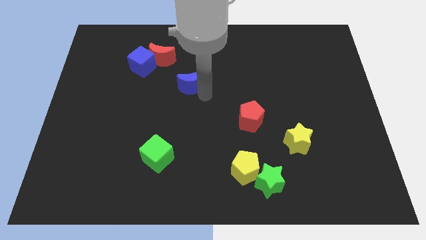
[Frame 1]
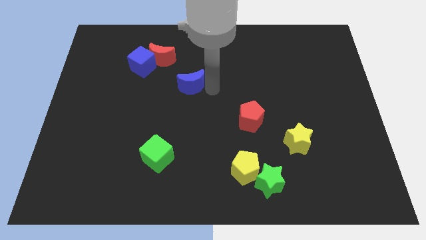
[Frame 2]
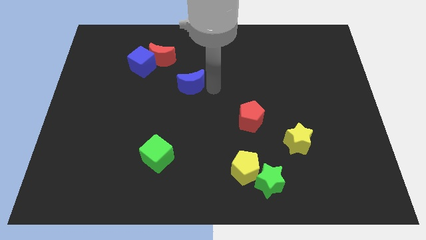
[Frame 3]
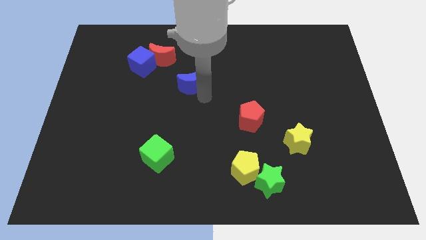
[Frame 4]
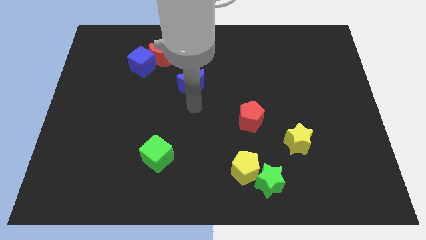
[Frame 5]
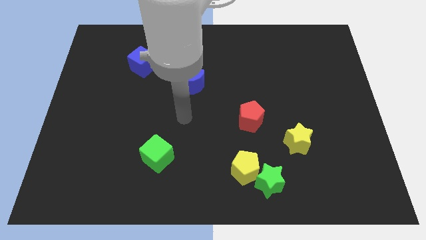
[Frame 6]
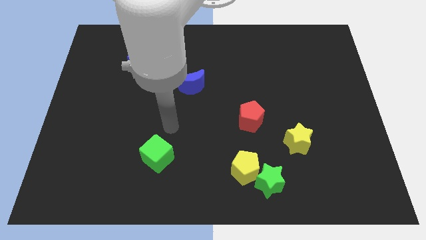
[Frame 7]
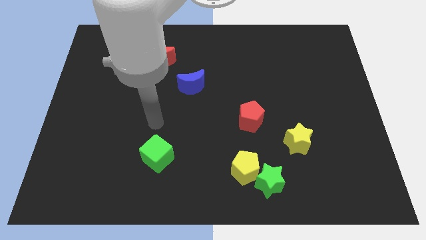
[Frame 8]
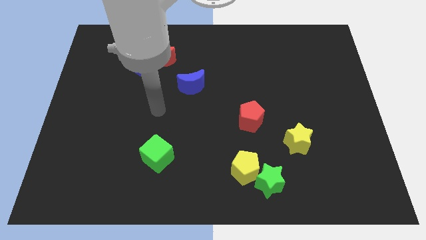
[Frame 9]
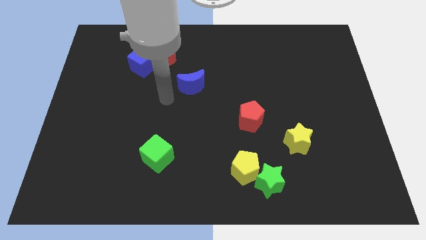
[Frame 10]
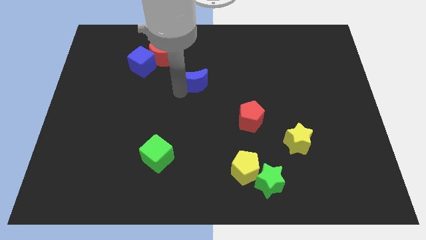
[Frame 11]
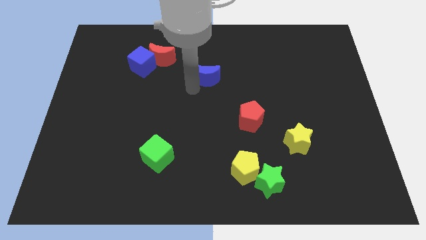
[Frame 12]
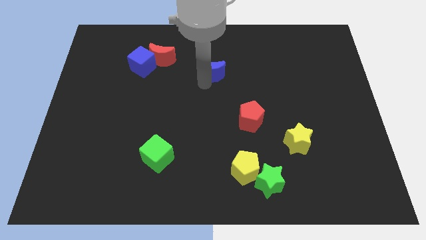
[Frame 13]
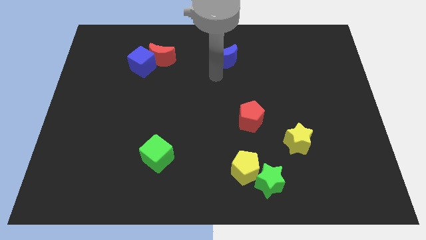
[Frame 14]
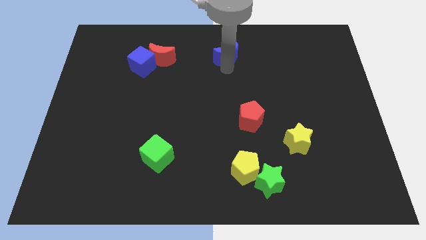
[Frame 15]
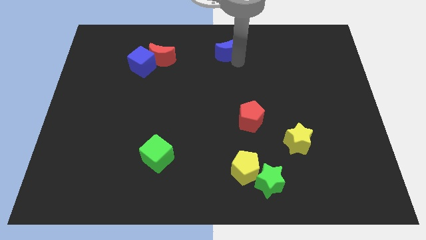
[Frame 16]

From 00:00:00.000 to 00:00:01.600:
move the blue crescent towards the top center

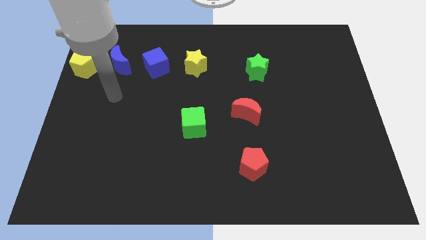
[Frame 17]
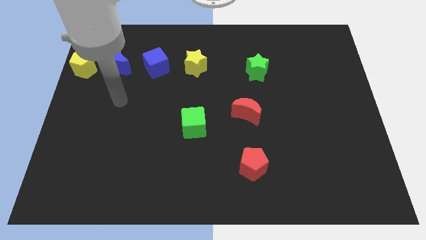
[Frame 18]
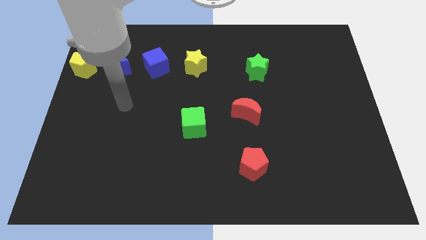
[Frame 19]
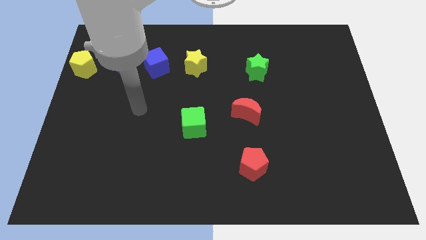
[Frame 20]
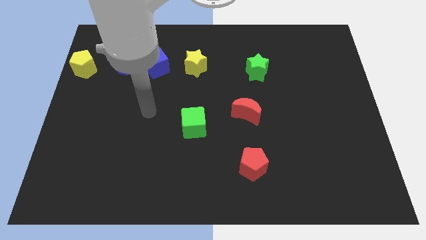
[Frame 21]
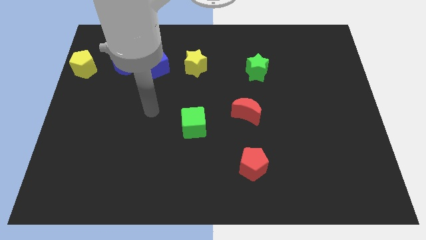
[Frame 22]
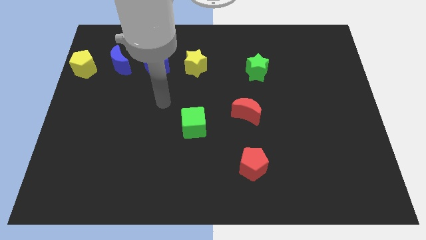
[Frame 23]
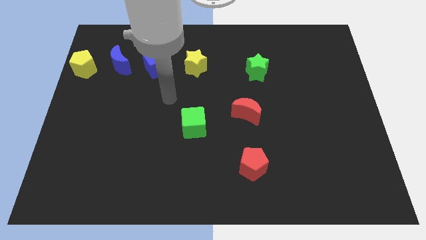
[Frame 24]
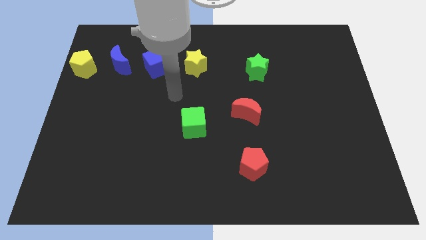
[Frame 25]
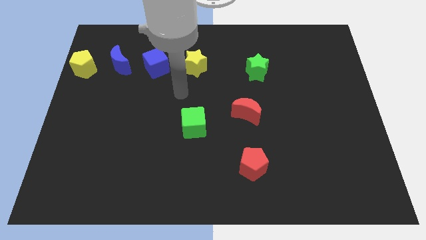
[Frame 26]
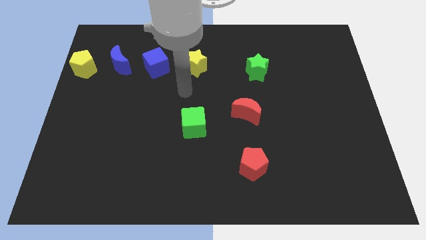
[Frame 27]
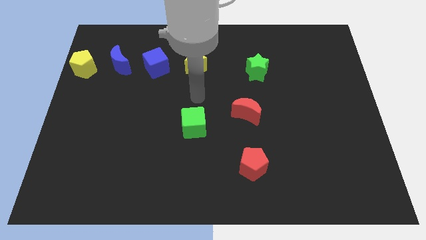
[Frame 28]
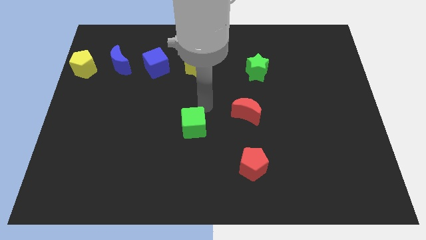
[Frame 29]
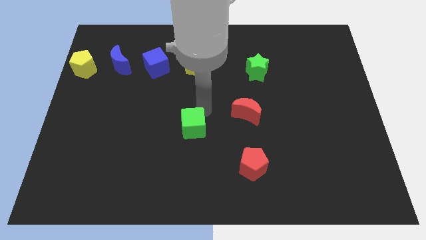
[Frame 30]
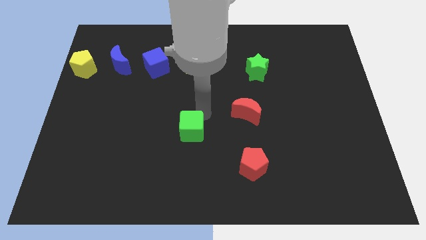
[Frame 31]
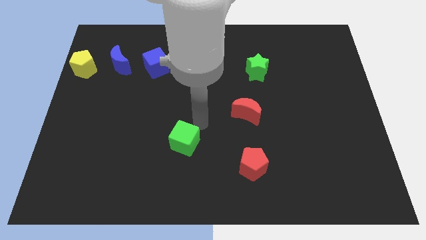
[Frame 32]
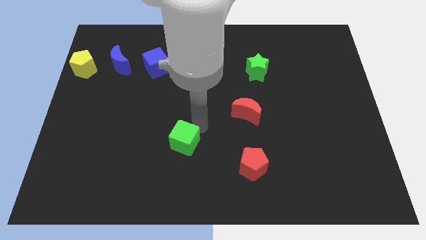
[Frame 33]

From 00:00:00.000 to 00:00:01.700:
tap the green cube

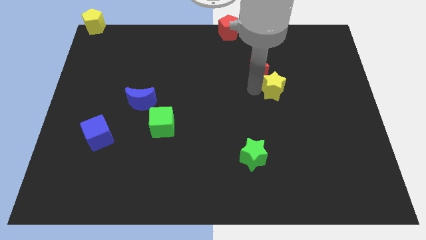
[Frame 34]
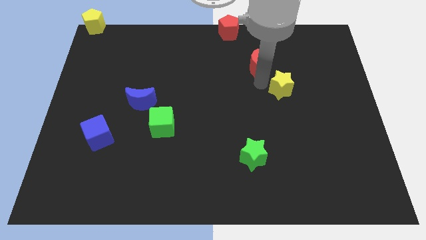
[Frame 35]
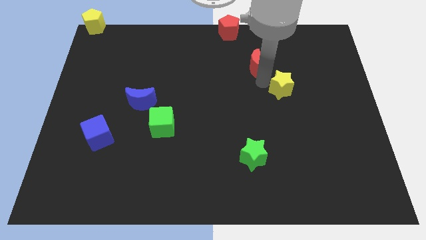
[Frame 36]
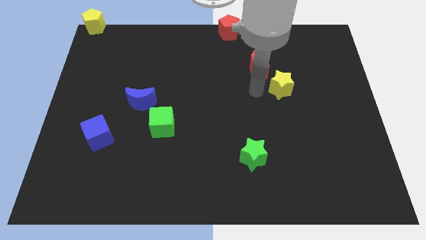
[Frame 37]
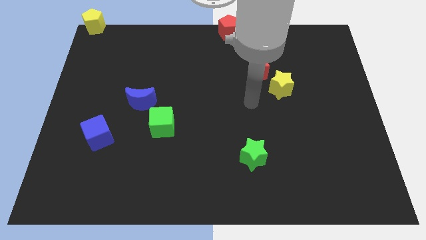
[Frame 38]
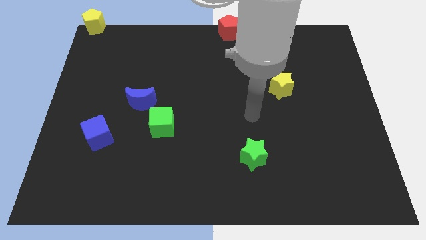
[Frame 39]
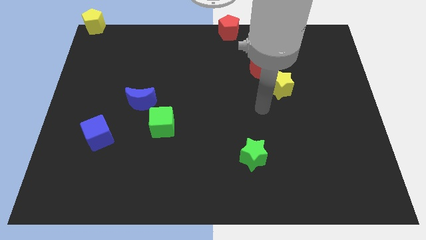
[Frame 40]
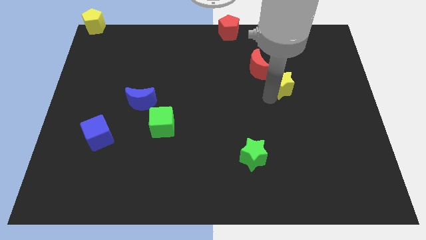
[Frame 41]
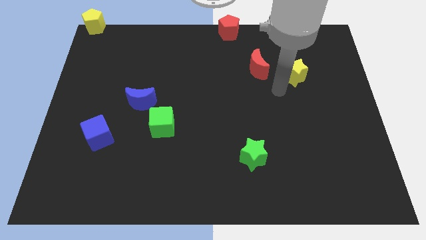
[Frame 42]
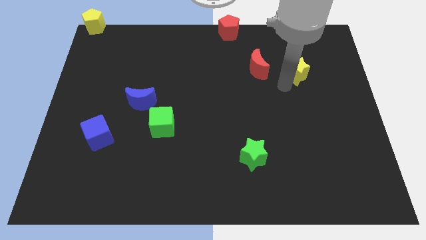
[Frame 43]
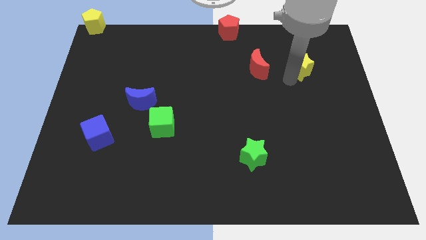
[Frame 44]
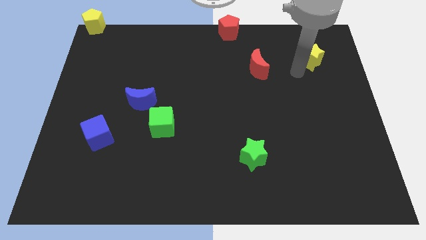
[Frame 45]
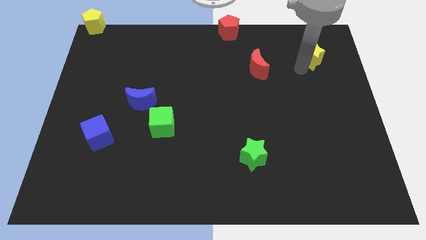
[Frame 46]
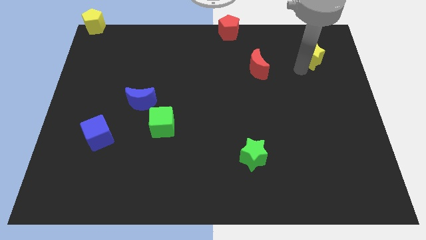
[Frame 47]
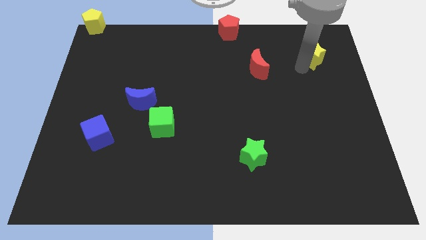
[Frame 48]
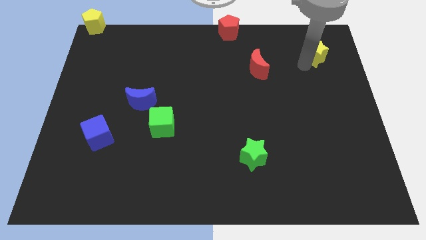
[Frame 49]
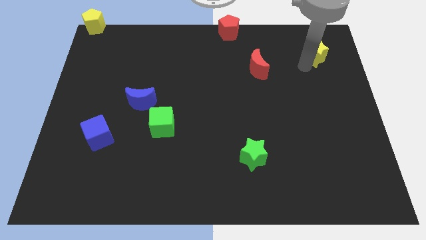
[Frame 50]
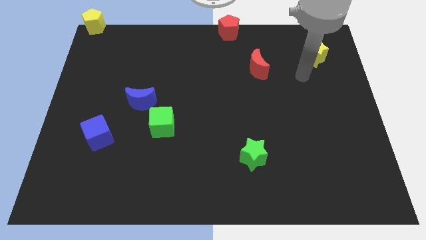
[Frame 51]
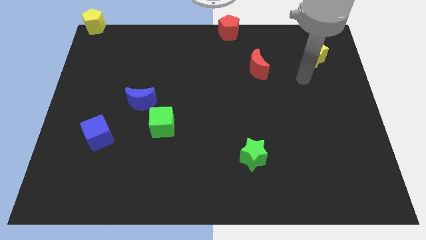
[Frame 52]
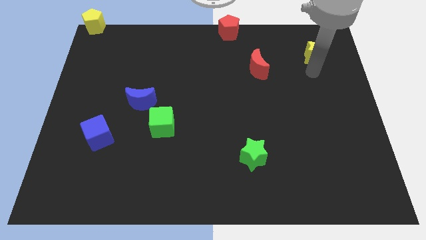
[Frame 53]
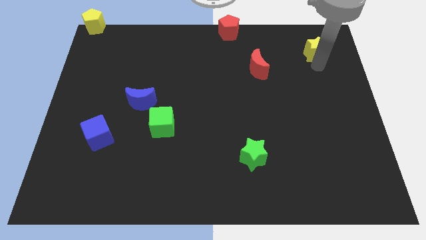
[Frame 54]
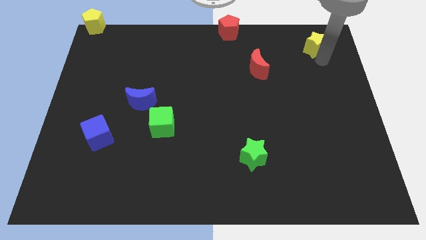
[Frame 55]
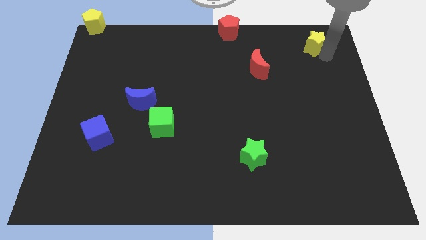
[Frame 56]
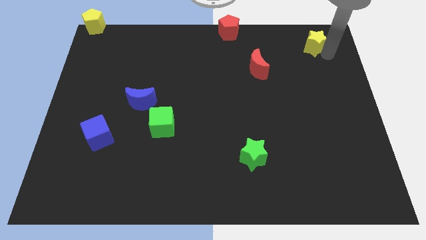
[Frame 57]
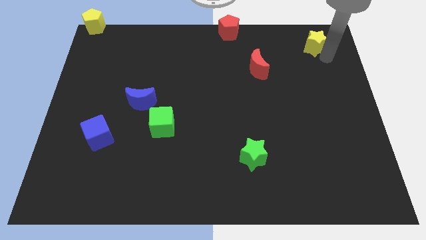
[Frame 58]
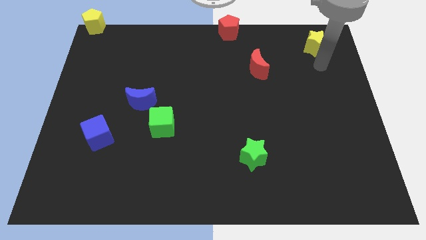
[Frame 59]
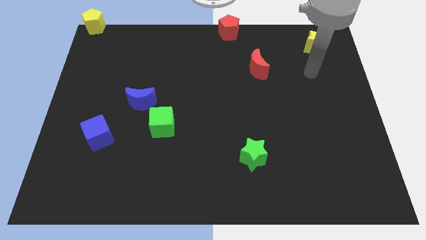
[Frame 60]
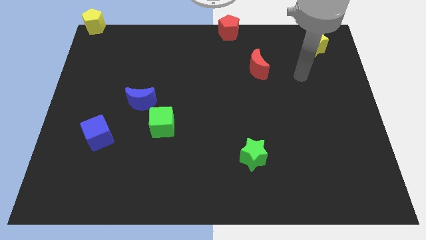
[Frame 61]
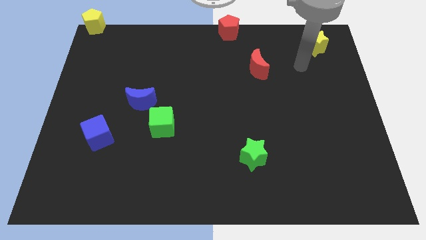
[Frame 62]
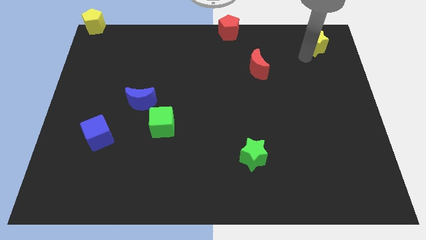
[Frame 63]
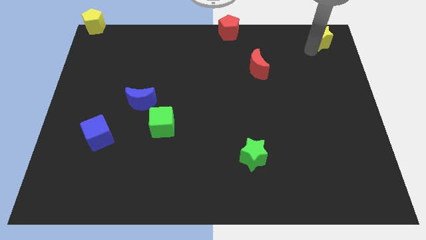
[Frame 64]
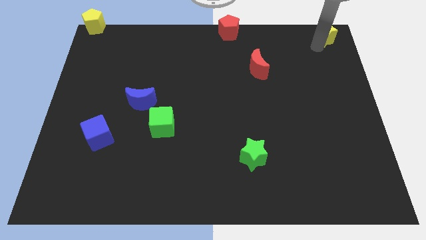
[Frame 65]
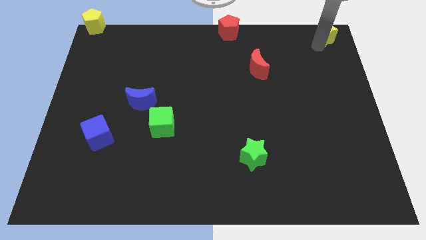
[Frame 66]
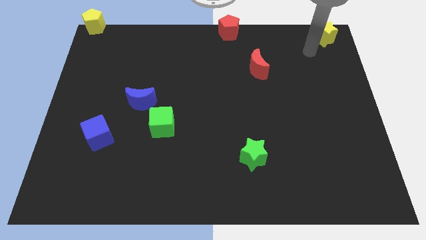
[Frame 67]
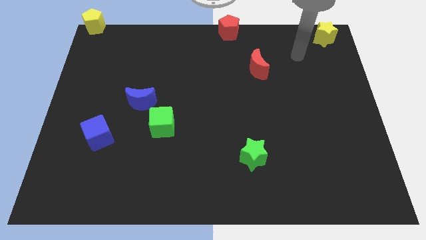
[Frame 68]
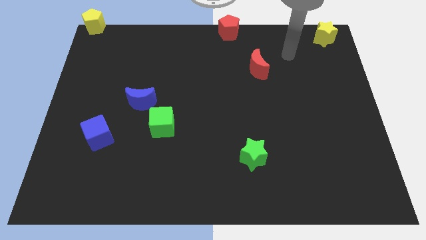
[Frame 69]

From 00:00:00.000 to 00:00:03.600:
push the yellow star to the top right of the bard

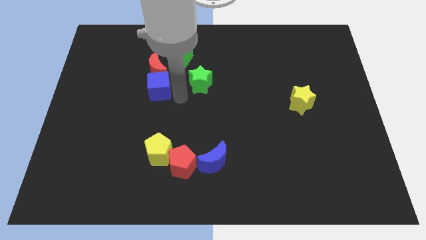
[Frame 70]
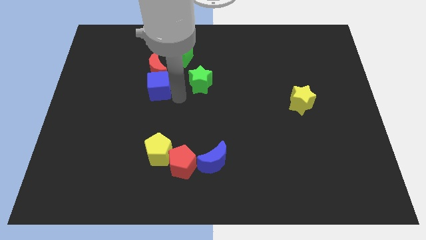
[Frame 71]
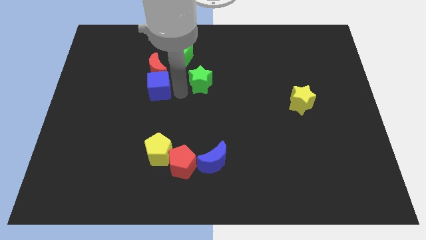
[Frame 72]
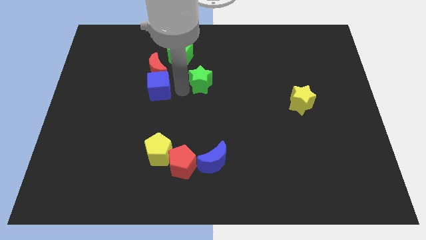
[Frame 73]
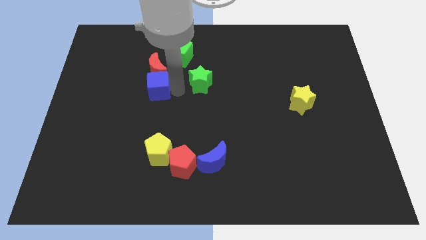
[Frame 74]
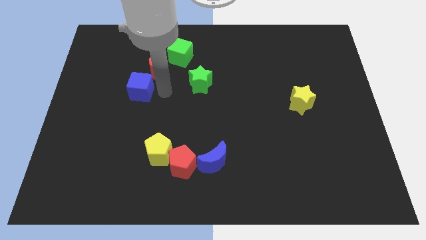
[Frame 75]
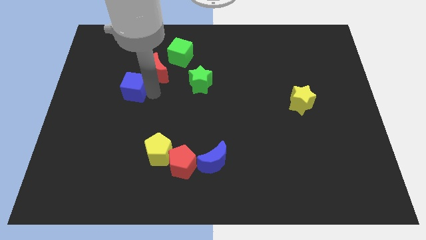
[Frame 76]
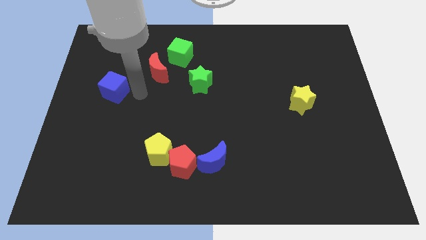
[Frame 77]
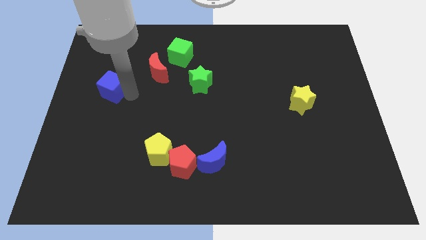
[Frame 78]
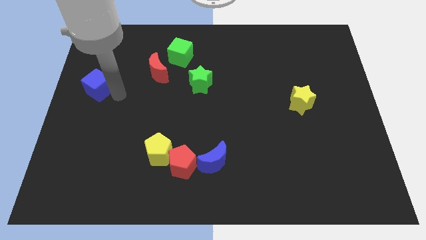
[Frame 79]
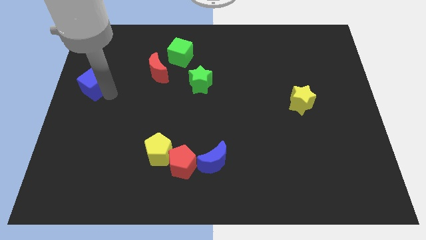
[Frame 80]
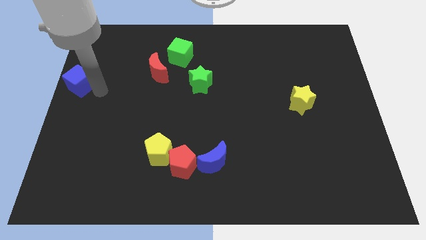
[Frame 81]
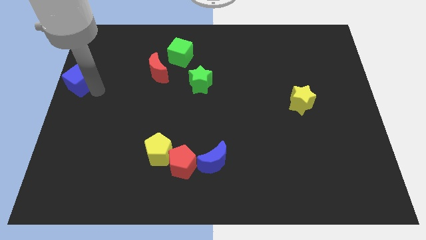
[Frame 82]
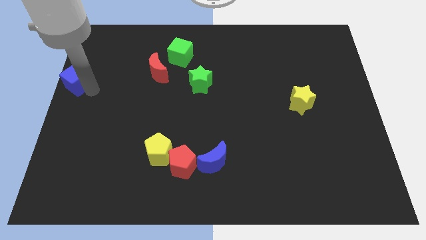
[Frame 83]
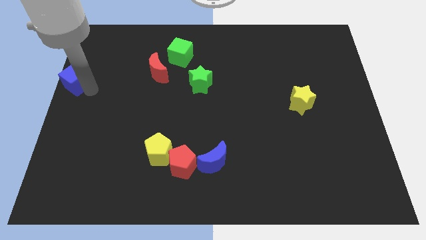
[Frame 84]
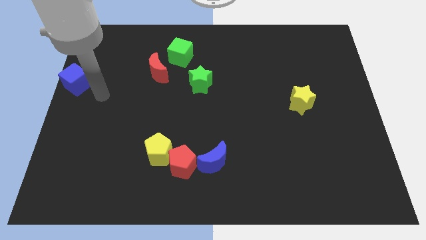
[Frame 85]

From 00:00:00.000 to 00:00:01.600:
move the blue cube to the left corner

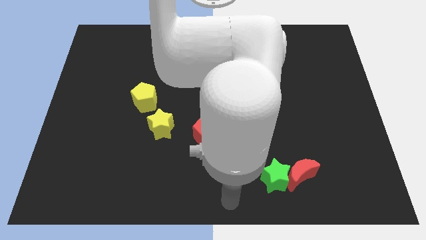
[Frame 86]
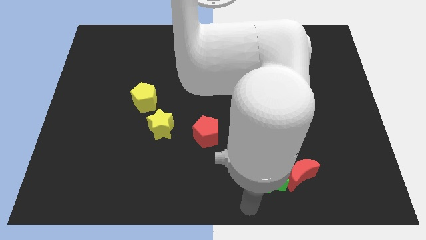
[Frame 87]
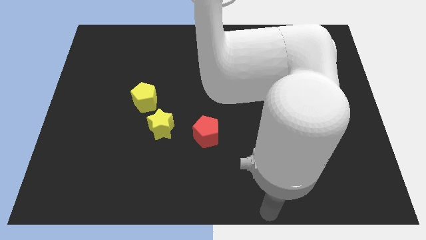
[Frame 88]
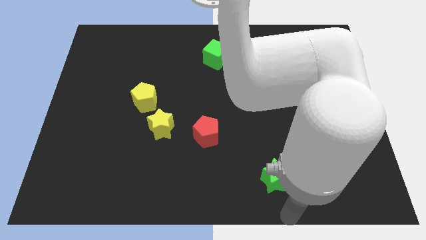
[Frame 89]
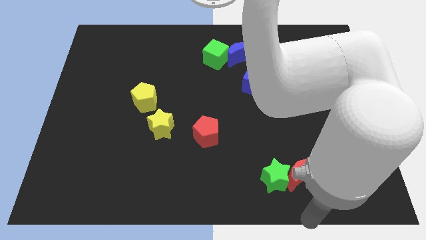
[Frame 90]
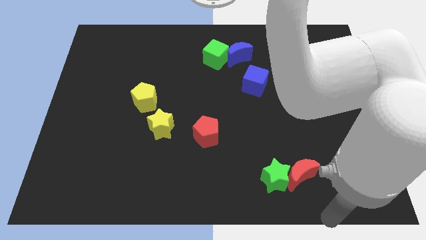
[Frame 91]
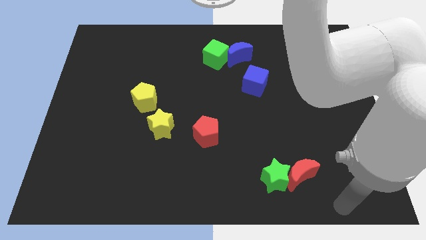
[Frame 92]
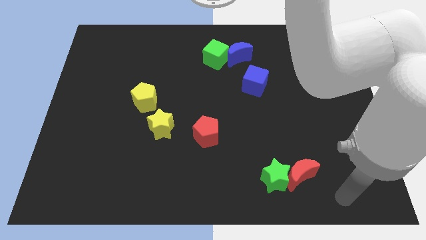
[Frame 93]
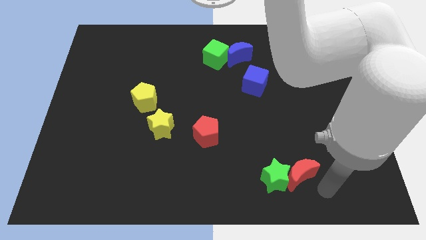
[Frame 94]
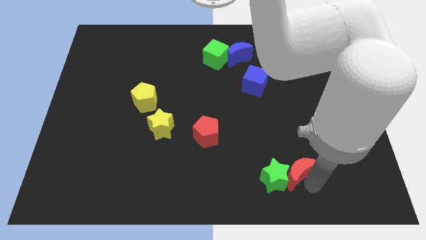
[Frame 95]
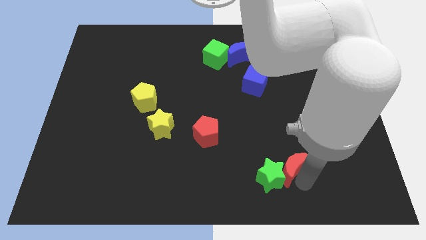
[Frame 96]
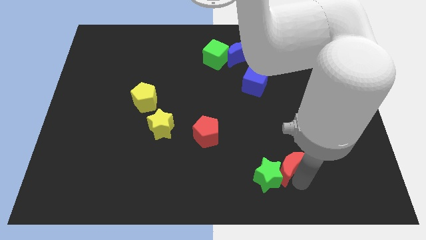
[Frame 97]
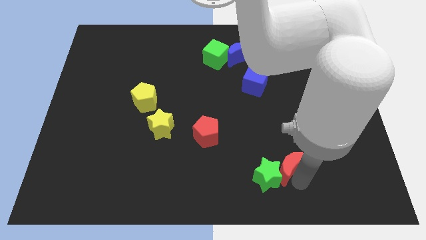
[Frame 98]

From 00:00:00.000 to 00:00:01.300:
touch the bottom right of the red moon
